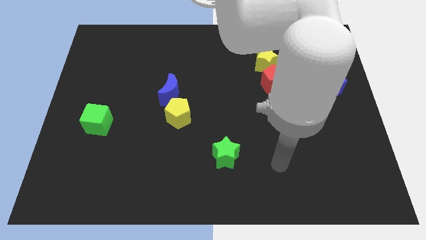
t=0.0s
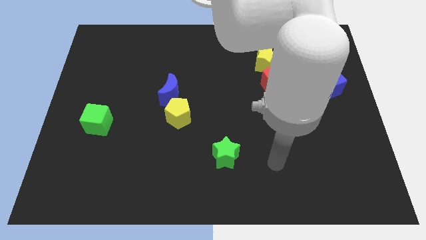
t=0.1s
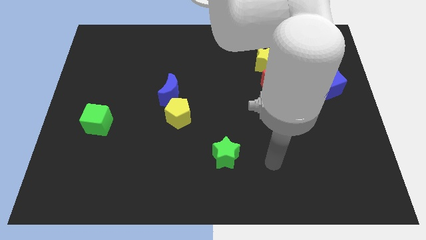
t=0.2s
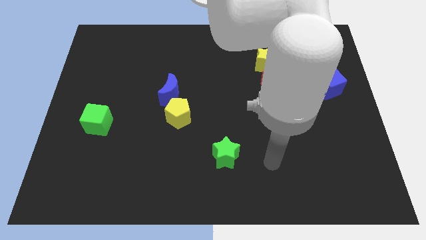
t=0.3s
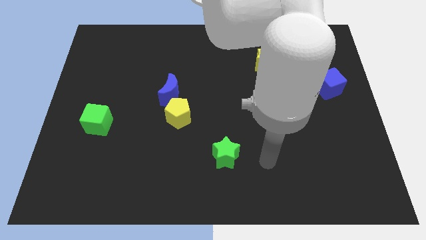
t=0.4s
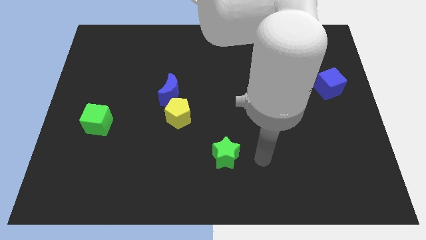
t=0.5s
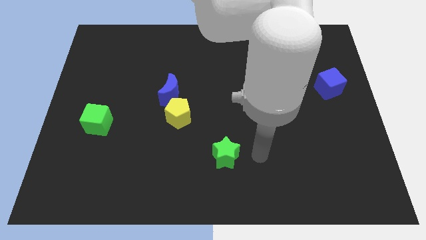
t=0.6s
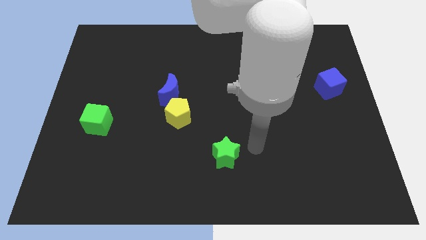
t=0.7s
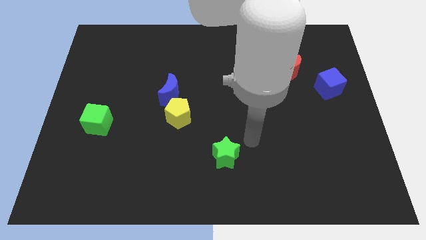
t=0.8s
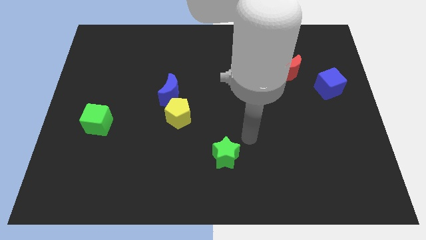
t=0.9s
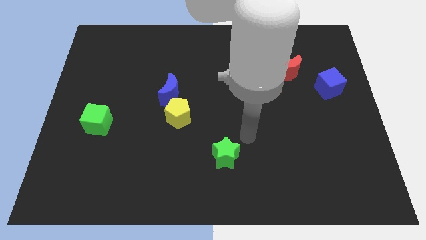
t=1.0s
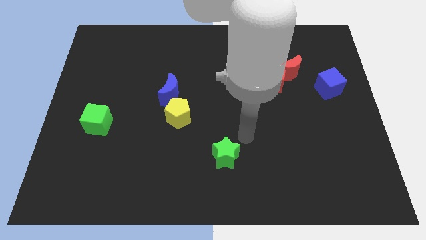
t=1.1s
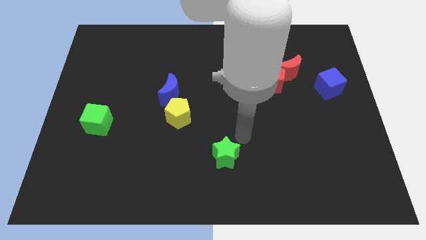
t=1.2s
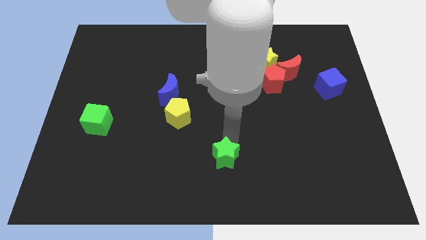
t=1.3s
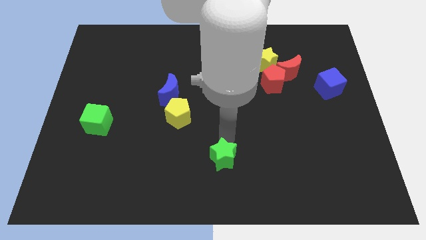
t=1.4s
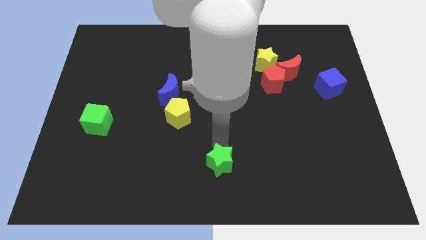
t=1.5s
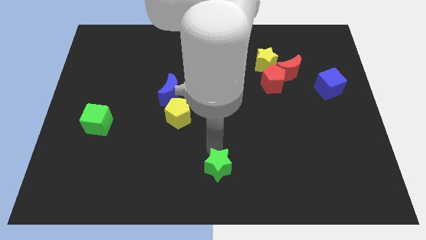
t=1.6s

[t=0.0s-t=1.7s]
move the green star slightly to the bottom

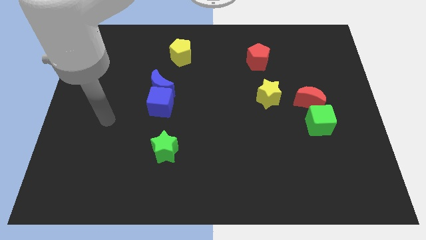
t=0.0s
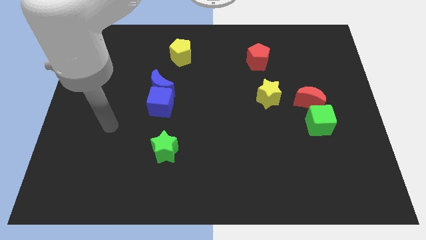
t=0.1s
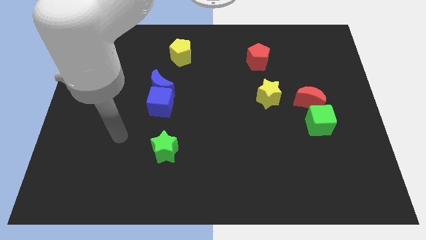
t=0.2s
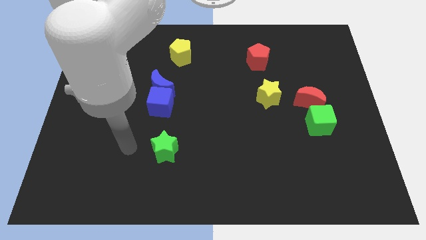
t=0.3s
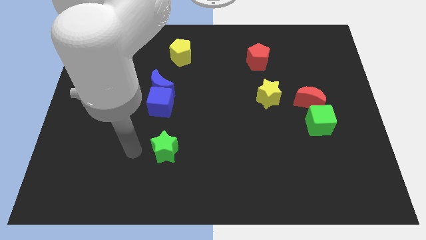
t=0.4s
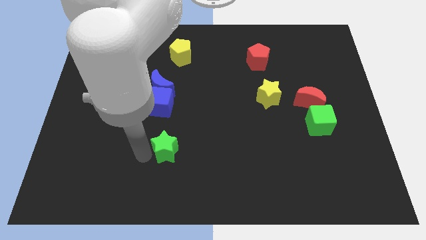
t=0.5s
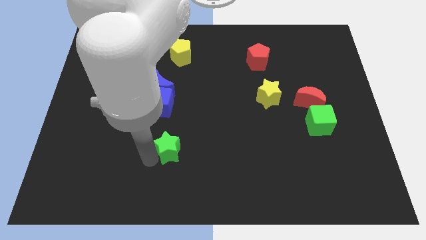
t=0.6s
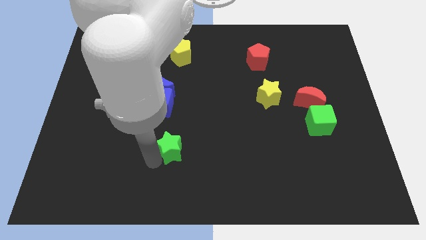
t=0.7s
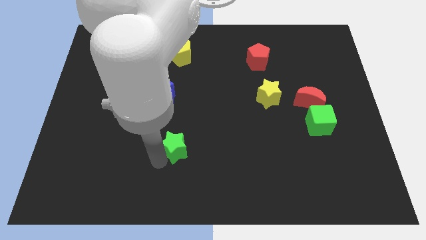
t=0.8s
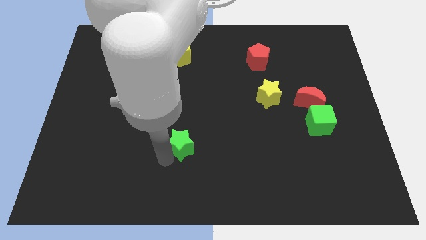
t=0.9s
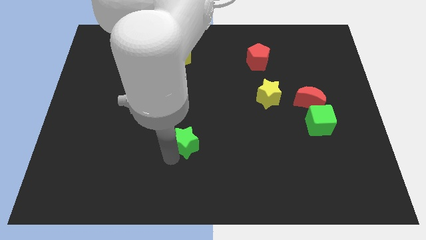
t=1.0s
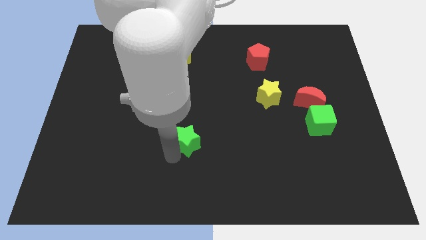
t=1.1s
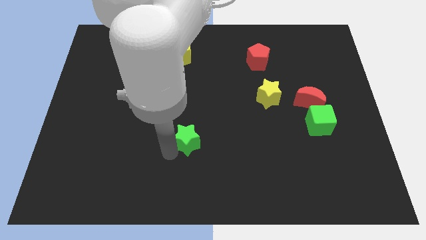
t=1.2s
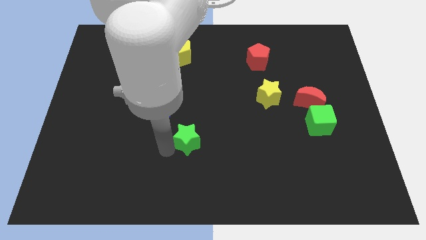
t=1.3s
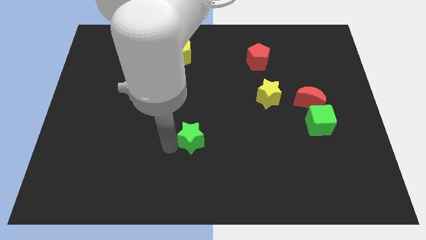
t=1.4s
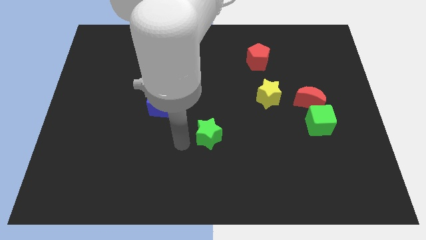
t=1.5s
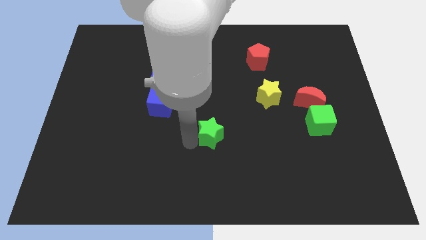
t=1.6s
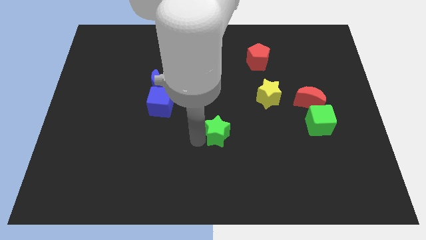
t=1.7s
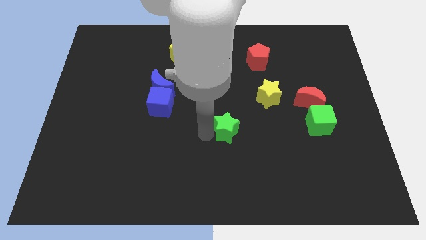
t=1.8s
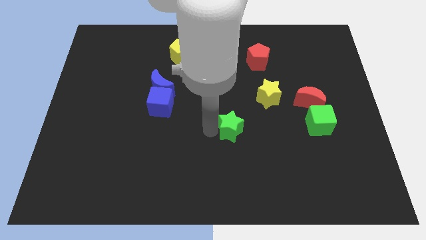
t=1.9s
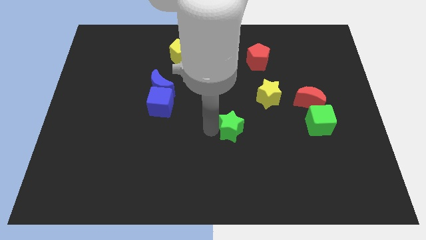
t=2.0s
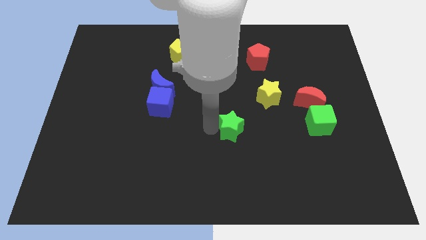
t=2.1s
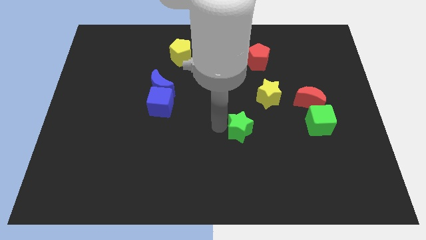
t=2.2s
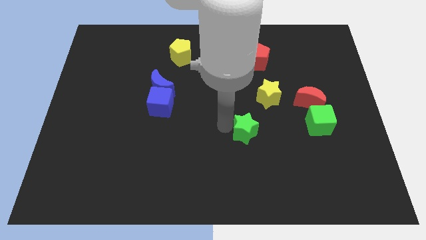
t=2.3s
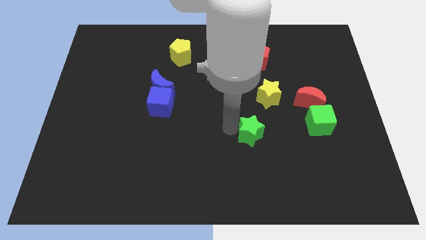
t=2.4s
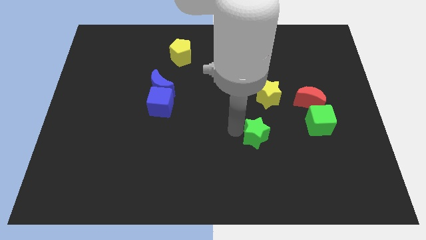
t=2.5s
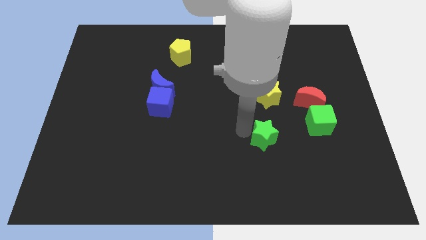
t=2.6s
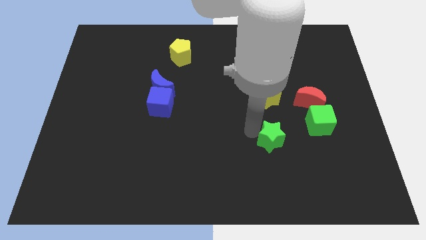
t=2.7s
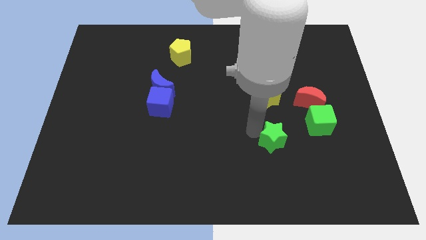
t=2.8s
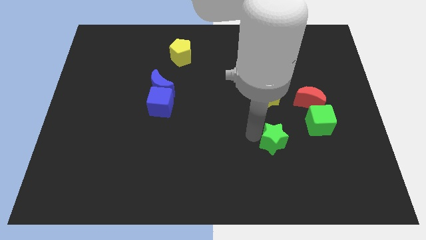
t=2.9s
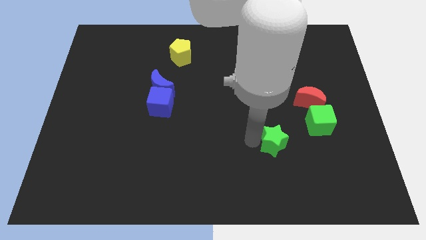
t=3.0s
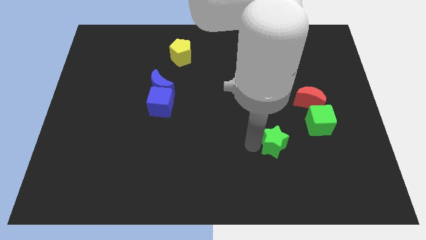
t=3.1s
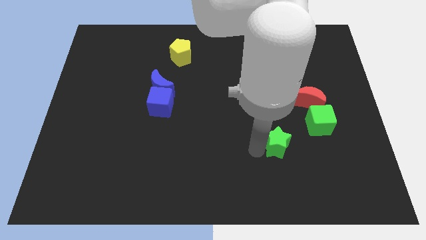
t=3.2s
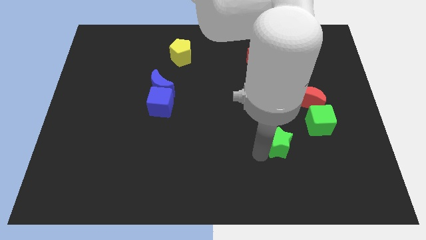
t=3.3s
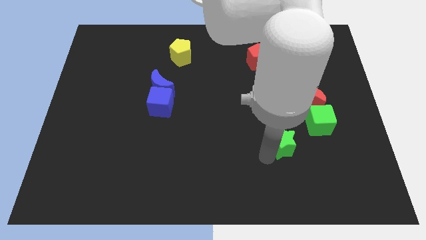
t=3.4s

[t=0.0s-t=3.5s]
place the green star diagonally to green cube

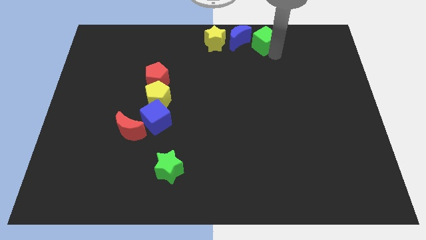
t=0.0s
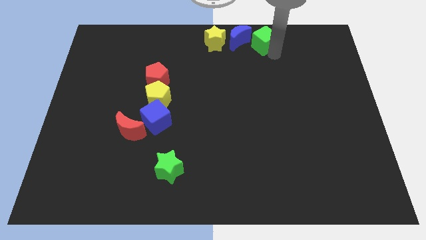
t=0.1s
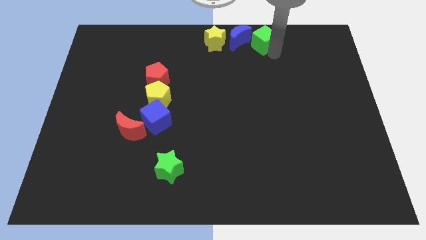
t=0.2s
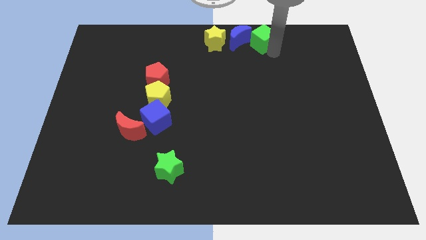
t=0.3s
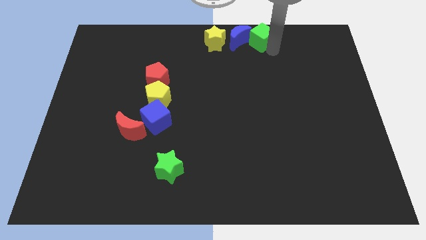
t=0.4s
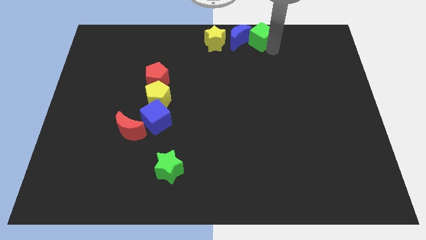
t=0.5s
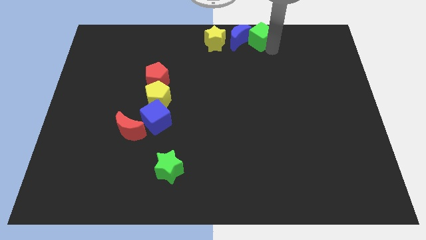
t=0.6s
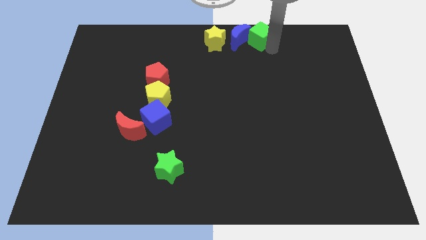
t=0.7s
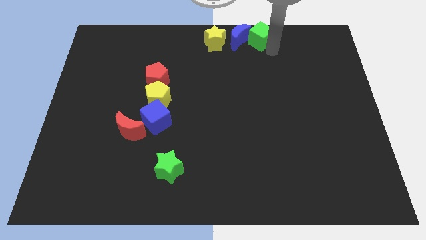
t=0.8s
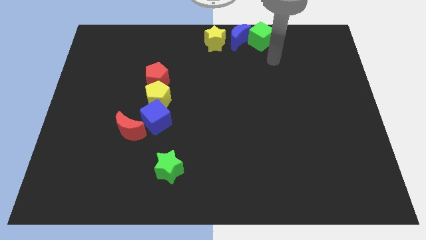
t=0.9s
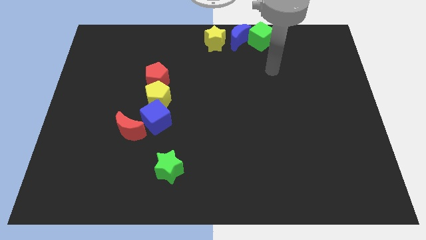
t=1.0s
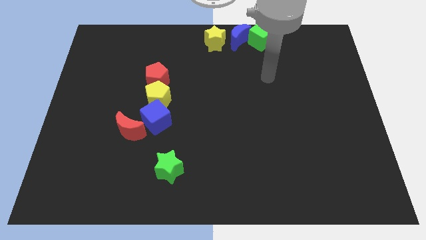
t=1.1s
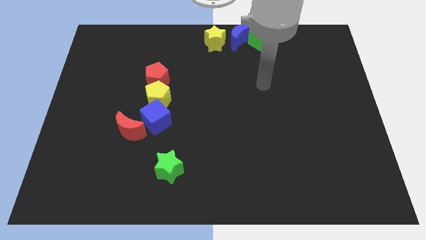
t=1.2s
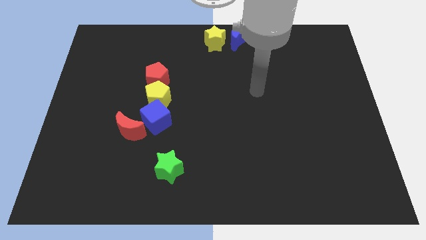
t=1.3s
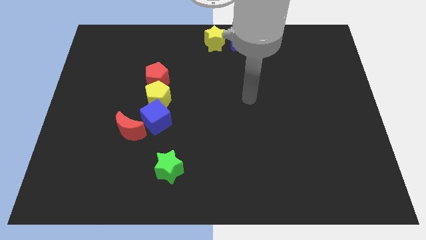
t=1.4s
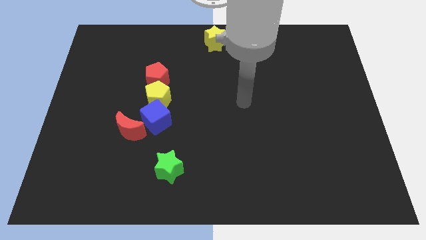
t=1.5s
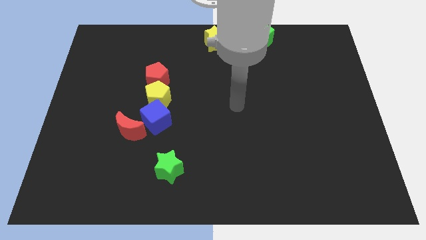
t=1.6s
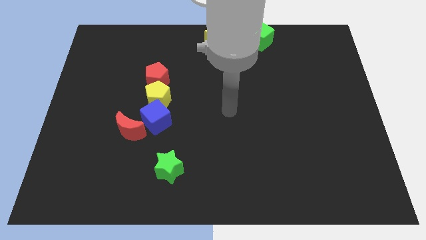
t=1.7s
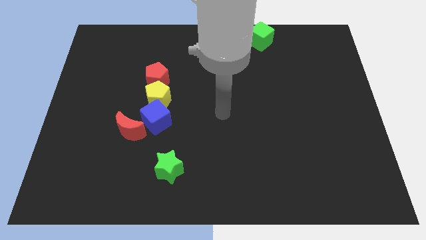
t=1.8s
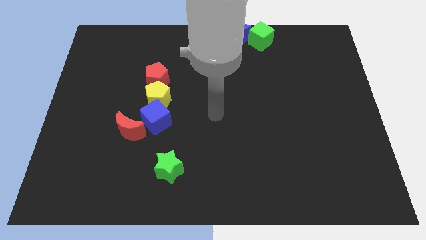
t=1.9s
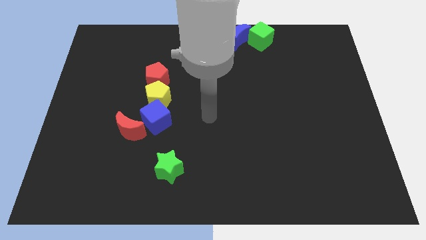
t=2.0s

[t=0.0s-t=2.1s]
slide your arm towards the center of the board

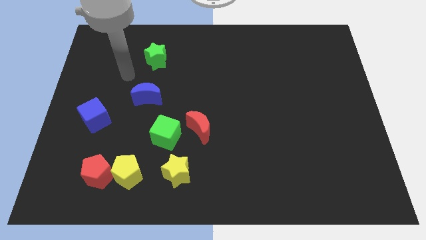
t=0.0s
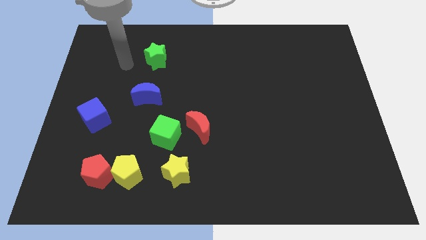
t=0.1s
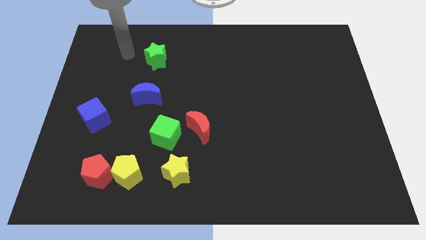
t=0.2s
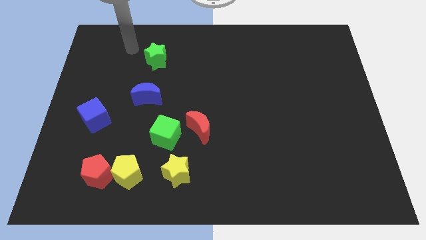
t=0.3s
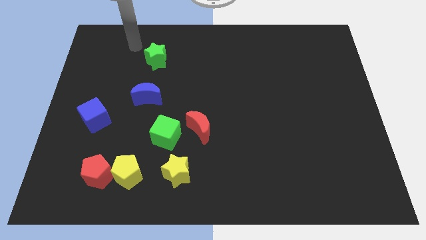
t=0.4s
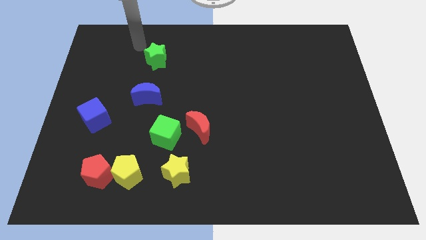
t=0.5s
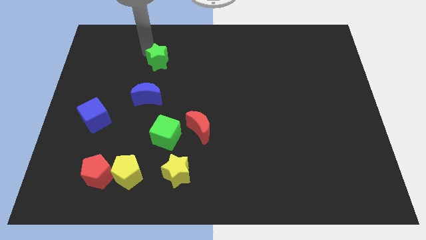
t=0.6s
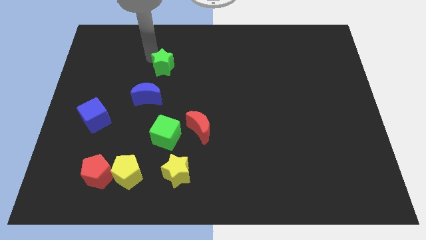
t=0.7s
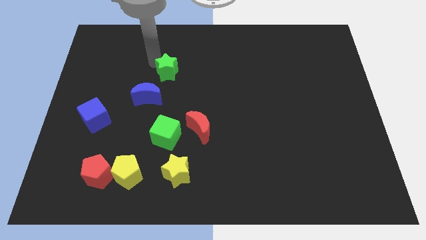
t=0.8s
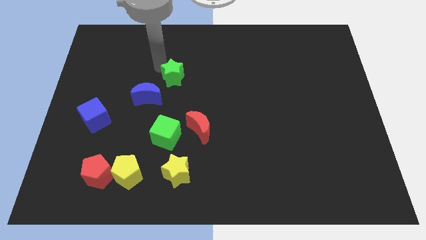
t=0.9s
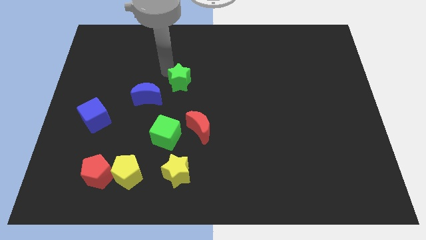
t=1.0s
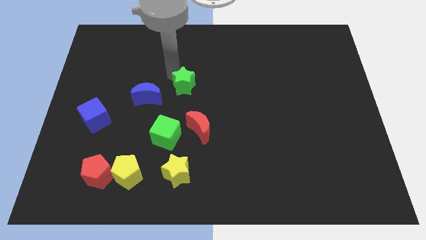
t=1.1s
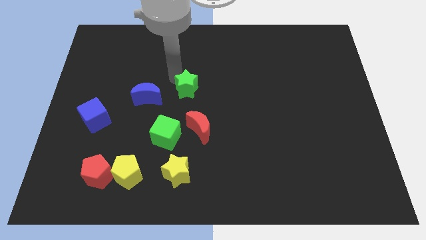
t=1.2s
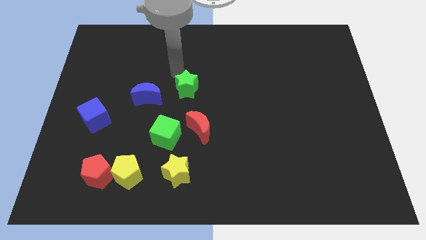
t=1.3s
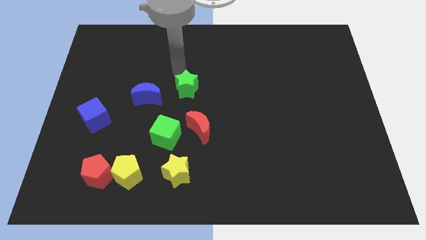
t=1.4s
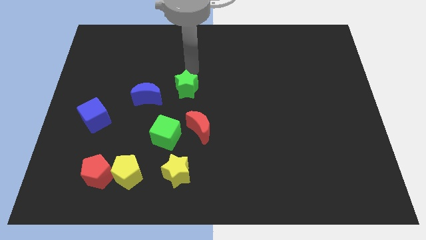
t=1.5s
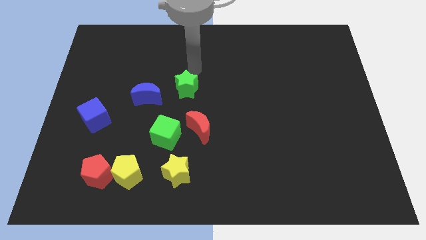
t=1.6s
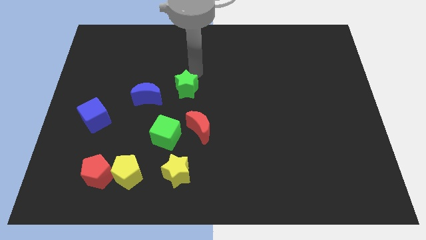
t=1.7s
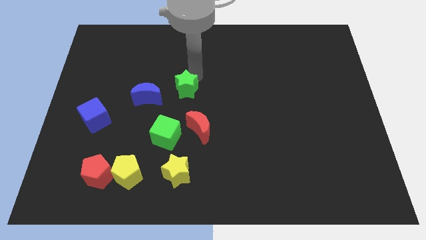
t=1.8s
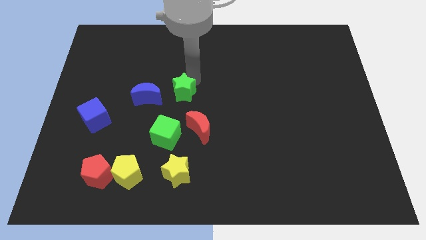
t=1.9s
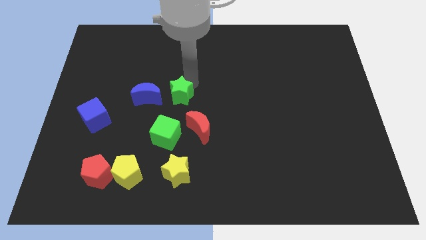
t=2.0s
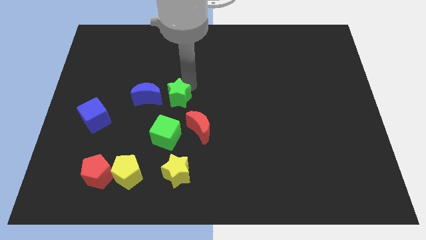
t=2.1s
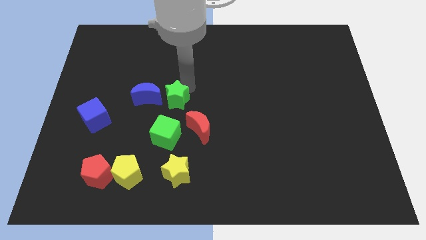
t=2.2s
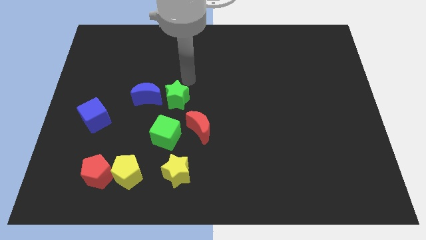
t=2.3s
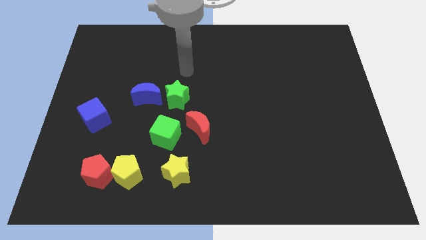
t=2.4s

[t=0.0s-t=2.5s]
move green star to the right of blue crescent
